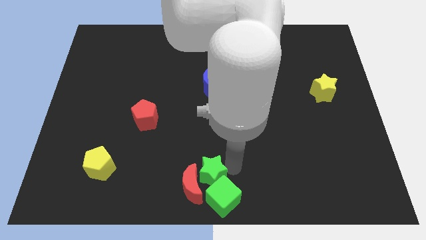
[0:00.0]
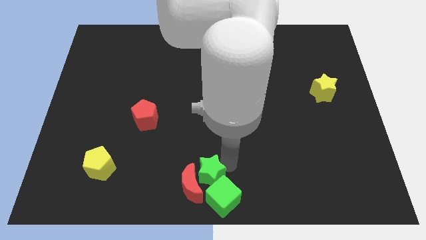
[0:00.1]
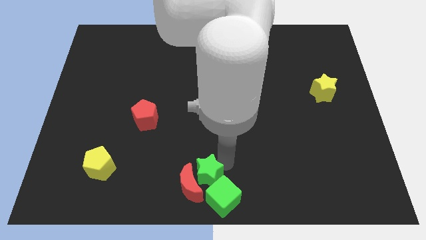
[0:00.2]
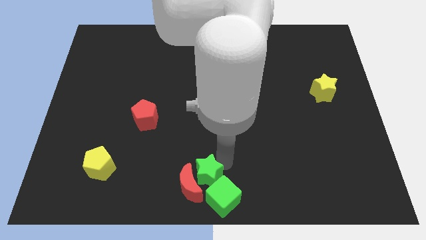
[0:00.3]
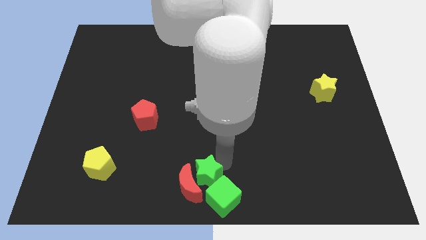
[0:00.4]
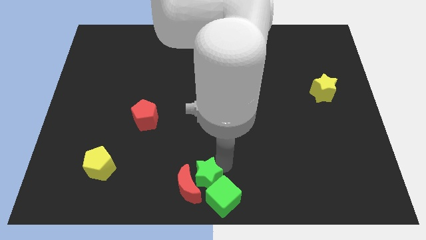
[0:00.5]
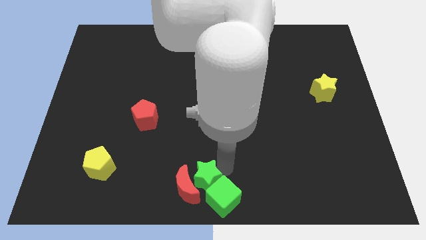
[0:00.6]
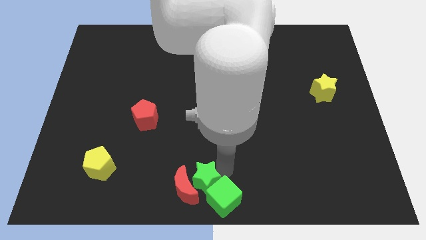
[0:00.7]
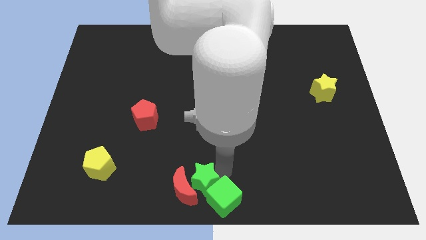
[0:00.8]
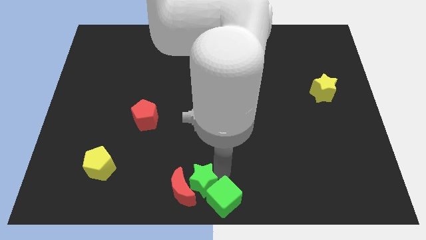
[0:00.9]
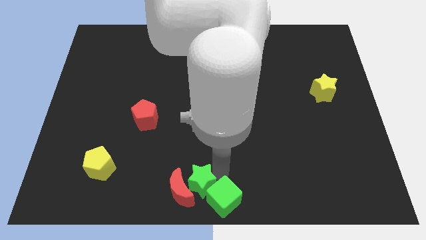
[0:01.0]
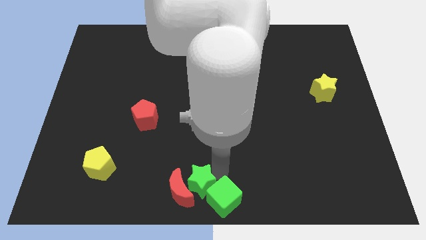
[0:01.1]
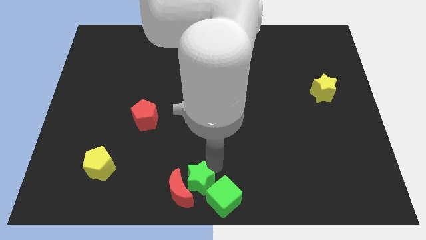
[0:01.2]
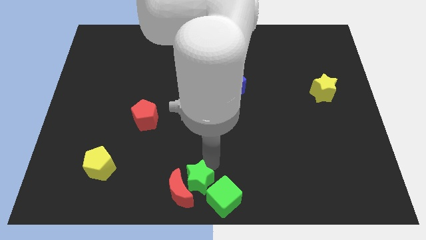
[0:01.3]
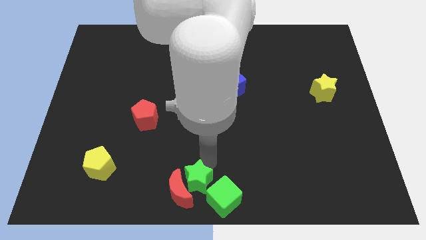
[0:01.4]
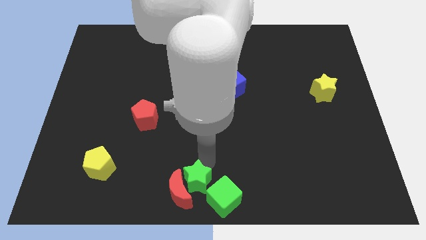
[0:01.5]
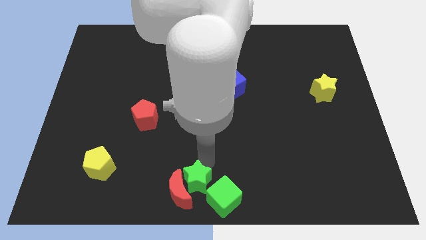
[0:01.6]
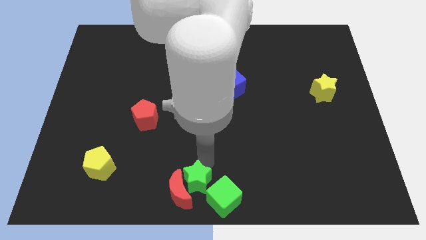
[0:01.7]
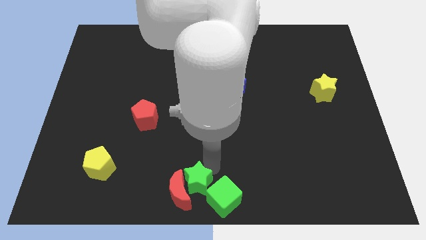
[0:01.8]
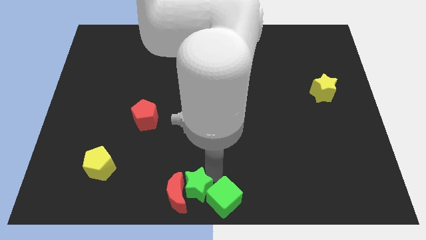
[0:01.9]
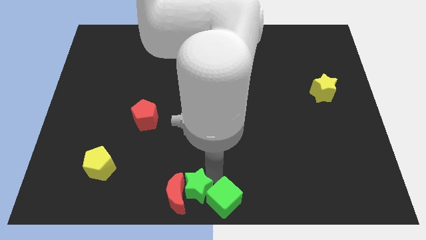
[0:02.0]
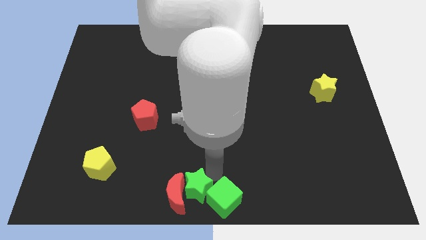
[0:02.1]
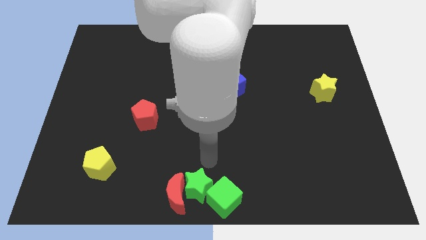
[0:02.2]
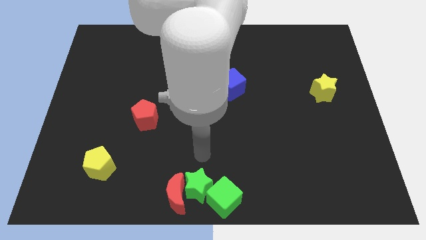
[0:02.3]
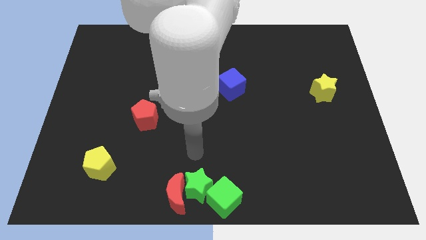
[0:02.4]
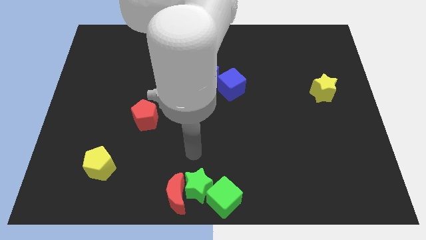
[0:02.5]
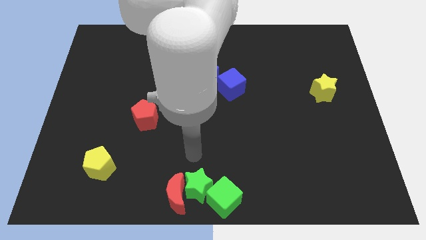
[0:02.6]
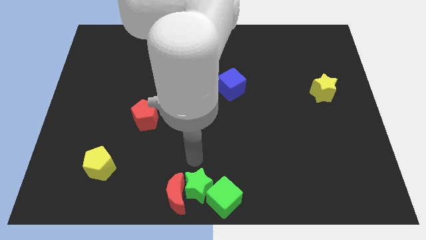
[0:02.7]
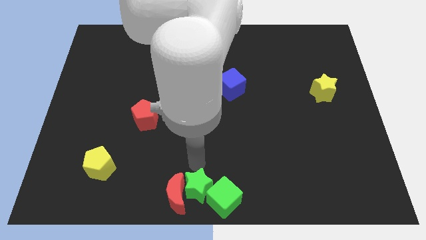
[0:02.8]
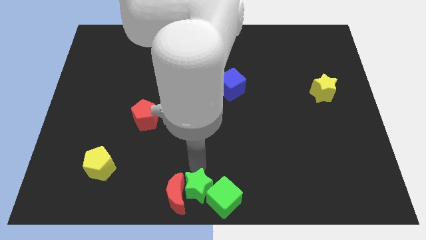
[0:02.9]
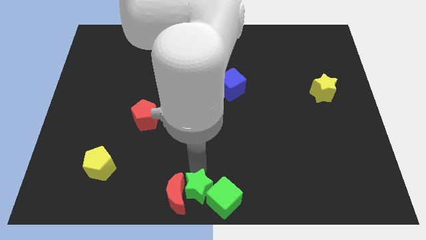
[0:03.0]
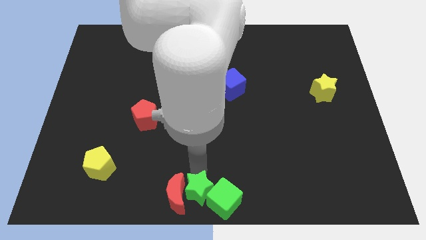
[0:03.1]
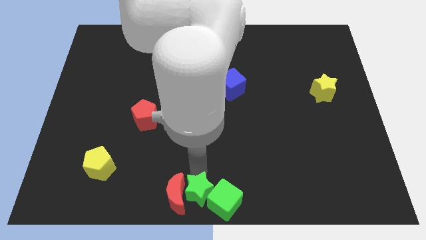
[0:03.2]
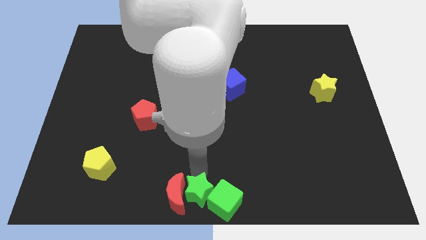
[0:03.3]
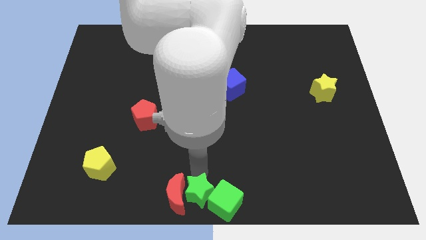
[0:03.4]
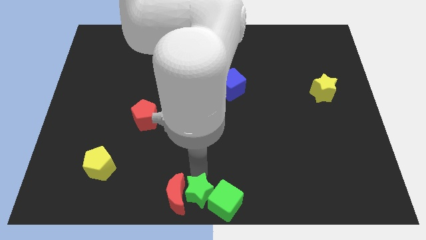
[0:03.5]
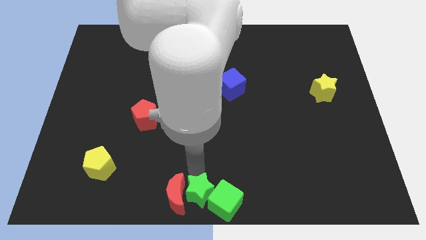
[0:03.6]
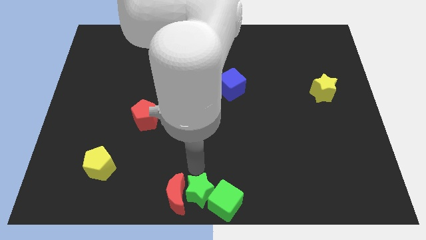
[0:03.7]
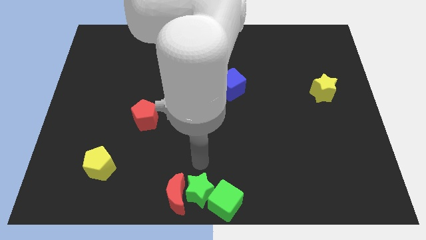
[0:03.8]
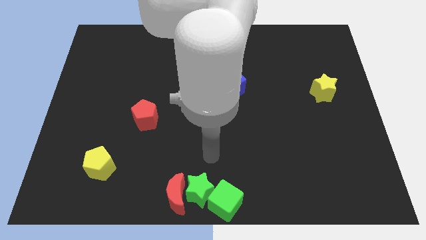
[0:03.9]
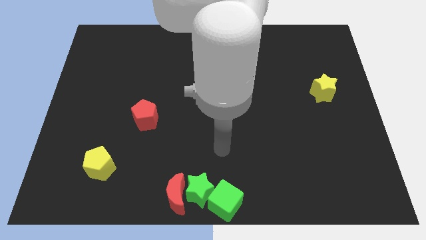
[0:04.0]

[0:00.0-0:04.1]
move the green star to the left of the green cube

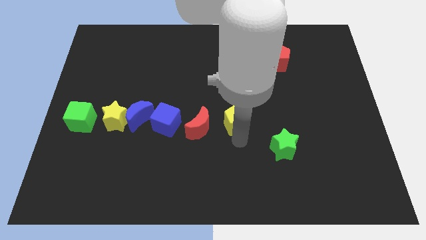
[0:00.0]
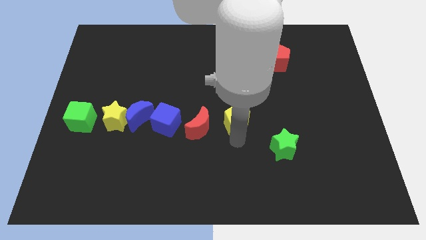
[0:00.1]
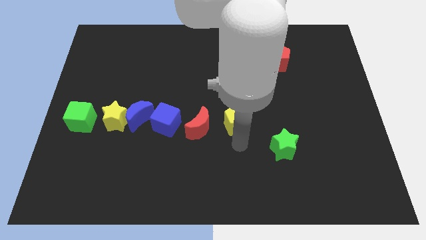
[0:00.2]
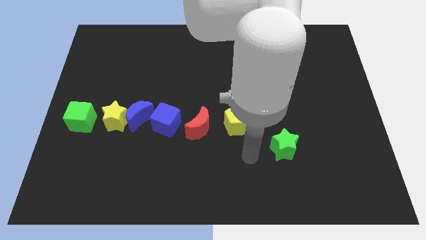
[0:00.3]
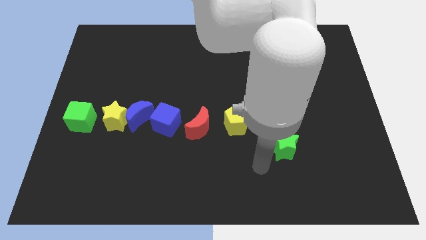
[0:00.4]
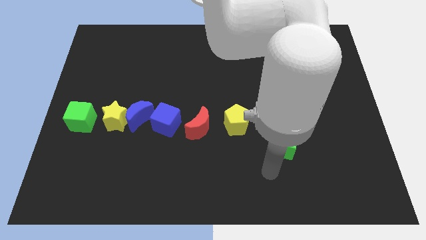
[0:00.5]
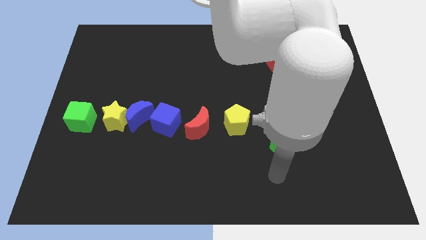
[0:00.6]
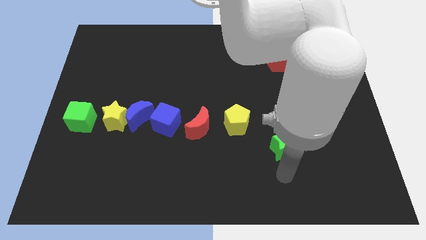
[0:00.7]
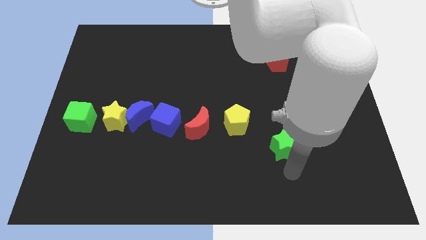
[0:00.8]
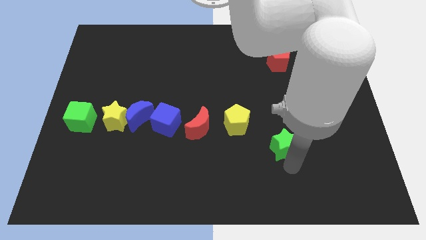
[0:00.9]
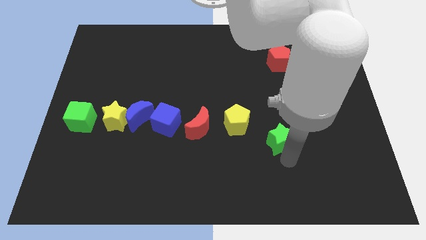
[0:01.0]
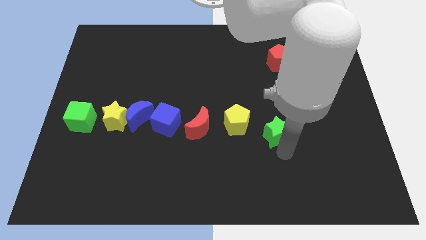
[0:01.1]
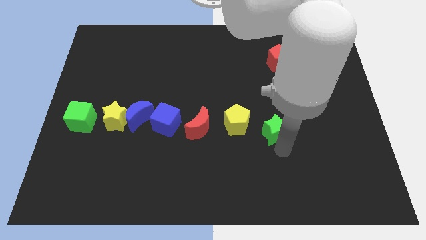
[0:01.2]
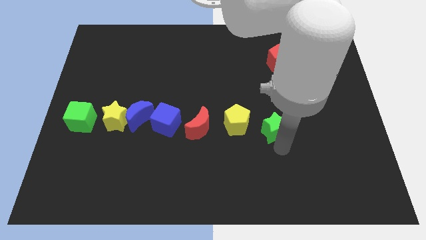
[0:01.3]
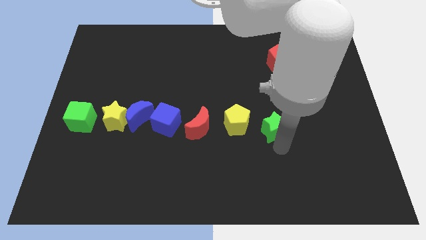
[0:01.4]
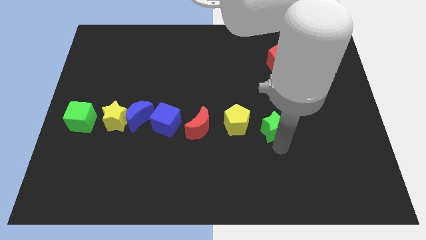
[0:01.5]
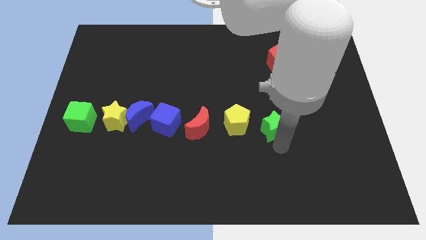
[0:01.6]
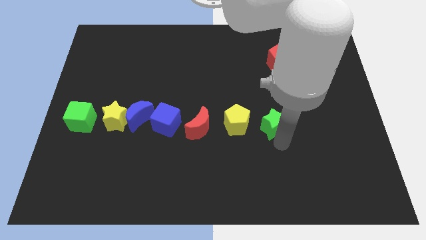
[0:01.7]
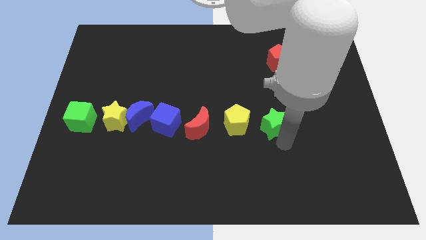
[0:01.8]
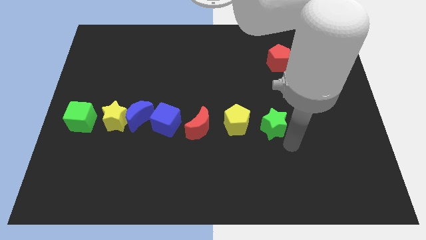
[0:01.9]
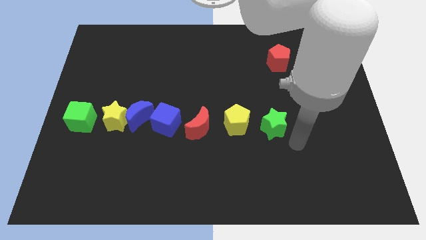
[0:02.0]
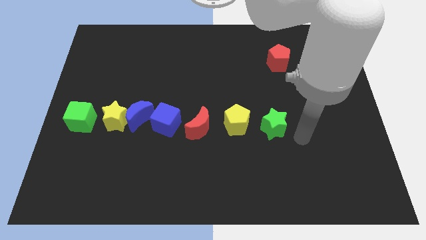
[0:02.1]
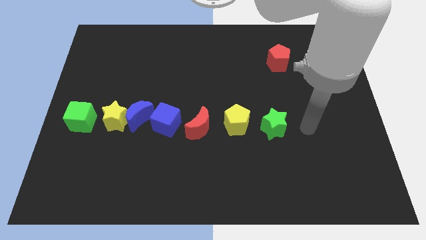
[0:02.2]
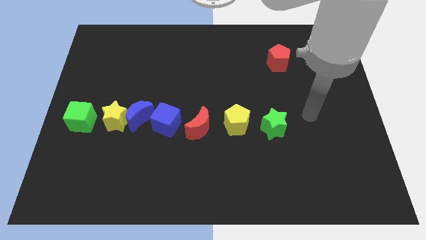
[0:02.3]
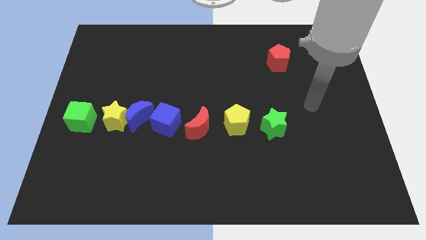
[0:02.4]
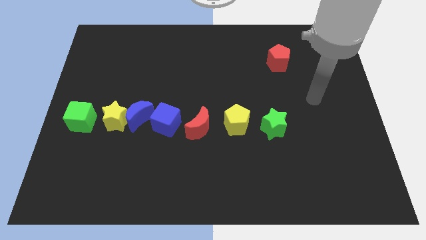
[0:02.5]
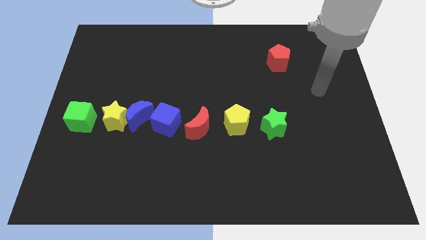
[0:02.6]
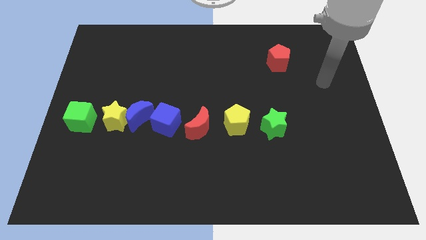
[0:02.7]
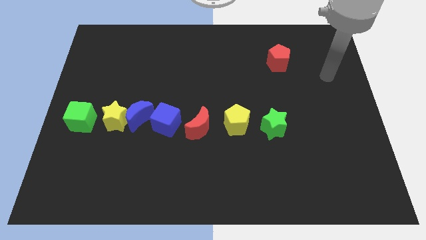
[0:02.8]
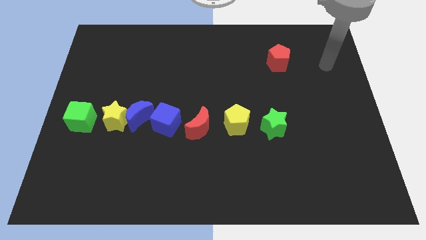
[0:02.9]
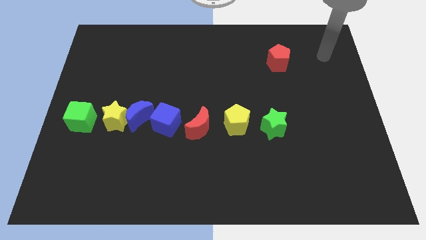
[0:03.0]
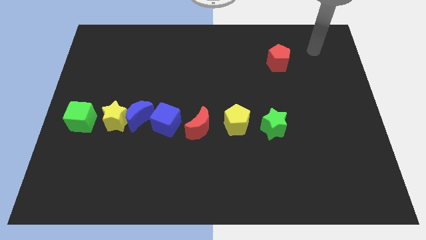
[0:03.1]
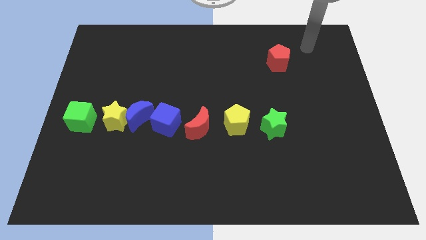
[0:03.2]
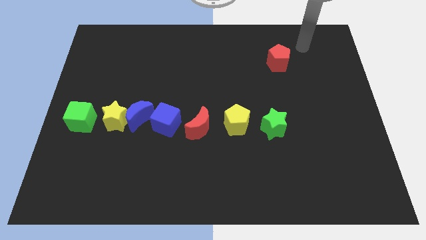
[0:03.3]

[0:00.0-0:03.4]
push the green star slightly upward

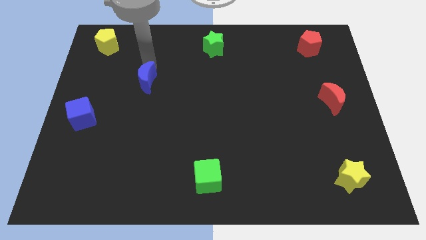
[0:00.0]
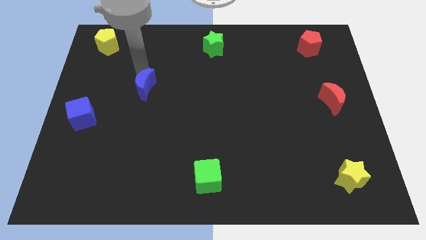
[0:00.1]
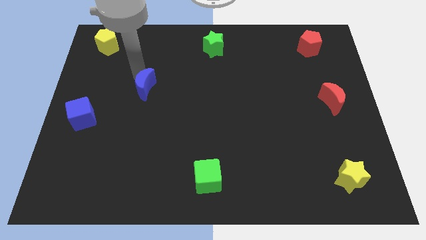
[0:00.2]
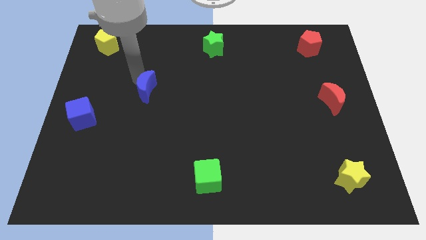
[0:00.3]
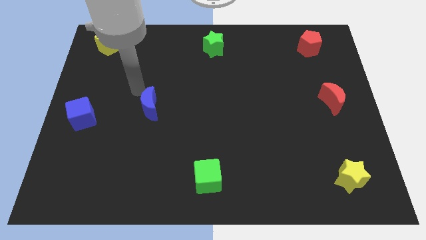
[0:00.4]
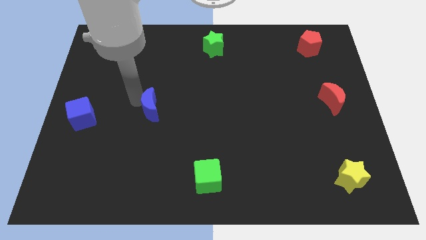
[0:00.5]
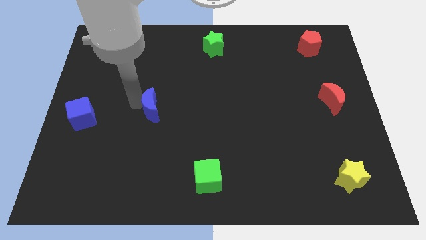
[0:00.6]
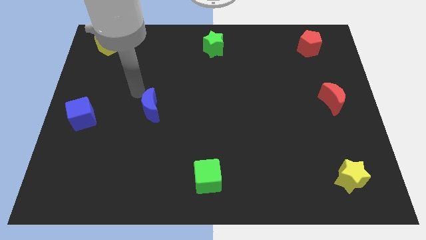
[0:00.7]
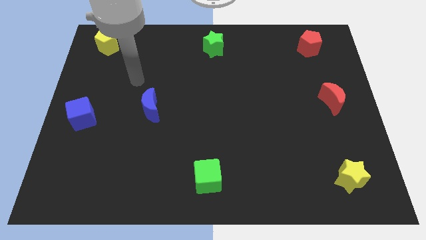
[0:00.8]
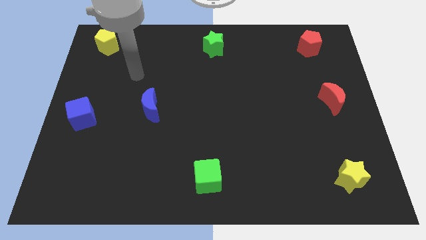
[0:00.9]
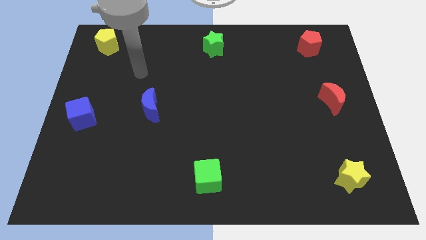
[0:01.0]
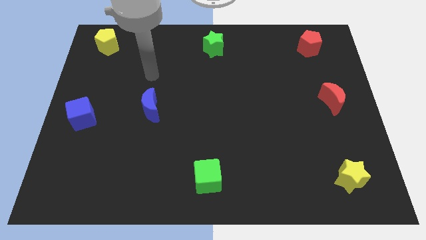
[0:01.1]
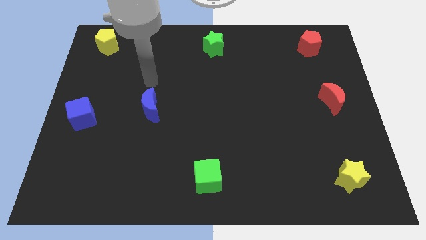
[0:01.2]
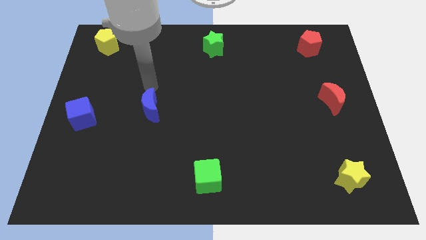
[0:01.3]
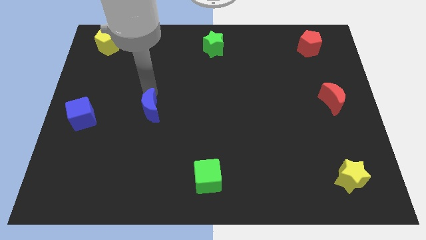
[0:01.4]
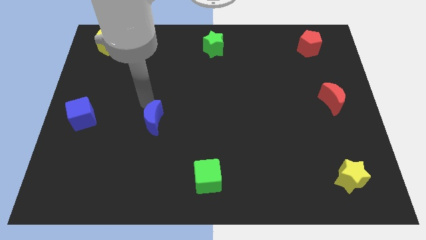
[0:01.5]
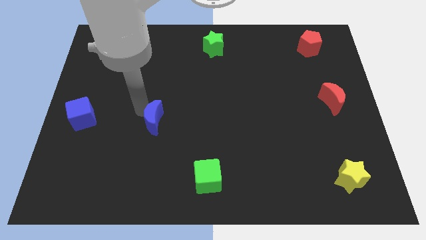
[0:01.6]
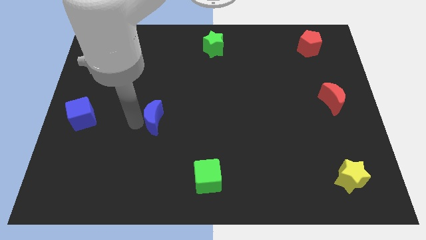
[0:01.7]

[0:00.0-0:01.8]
bring the blue crescent at the right side of the blue cube
